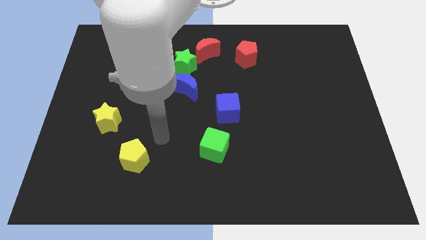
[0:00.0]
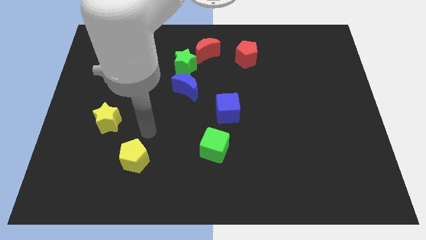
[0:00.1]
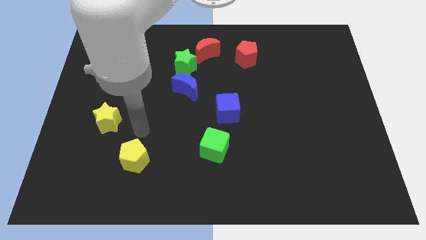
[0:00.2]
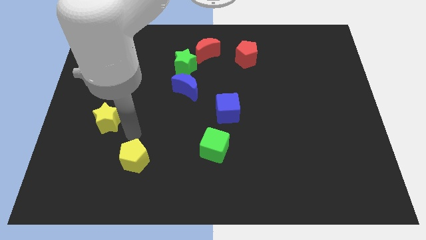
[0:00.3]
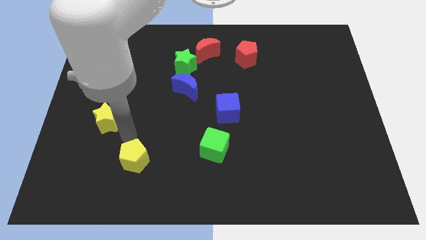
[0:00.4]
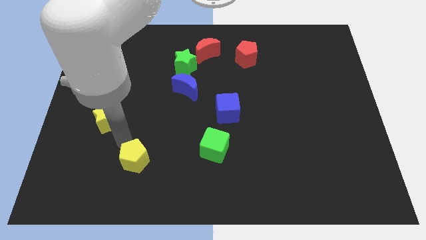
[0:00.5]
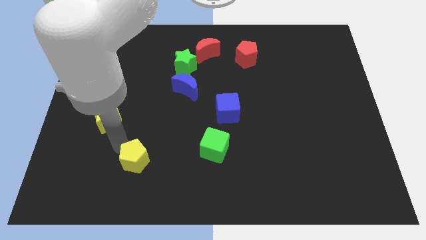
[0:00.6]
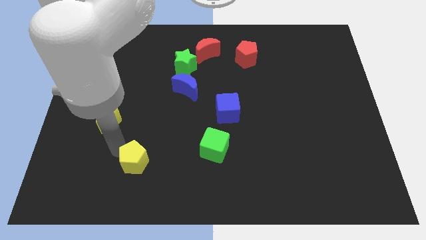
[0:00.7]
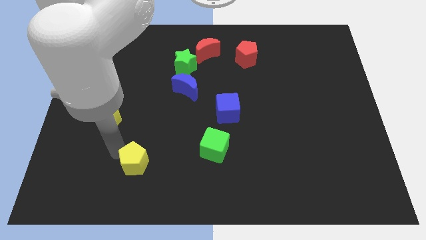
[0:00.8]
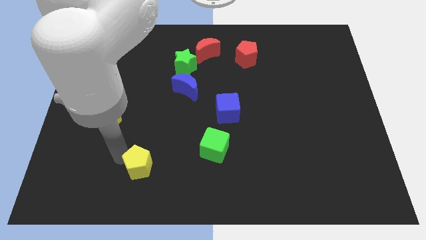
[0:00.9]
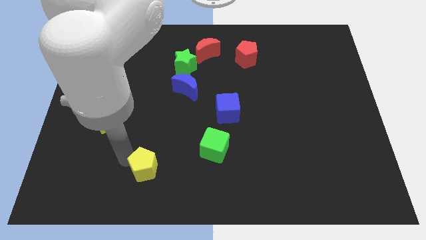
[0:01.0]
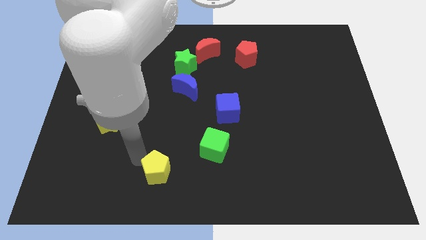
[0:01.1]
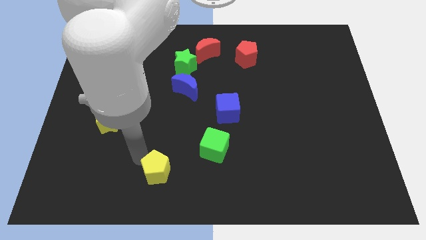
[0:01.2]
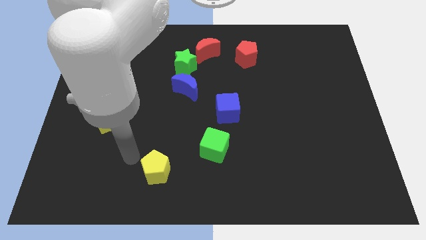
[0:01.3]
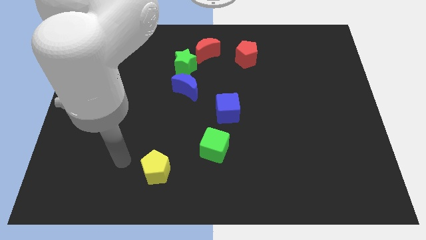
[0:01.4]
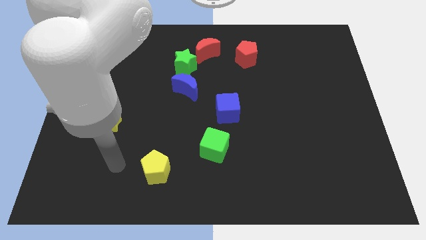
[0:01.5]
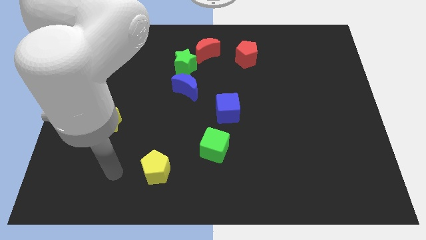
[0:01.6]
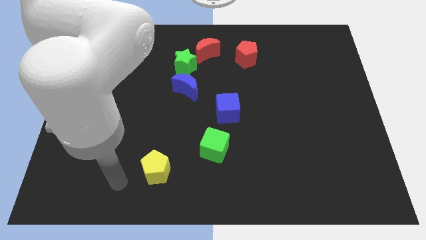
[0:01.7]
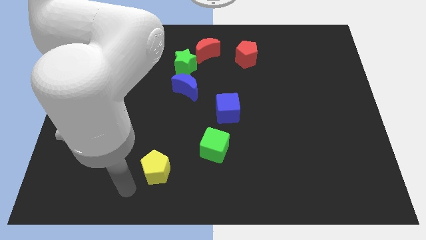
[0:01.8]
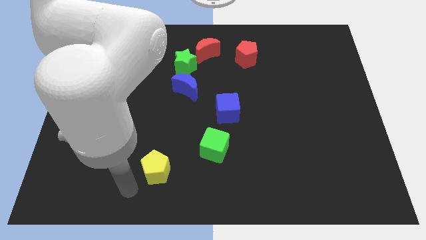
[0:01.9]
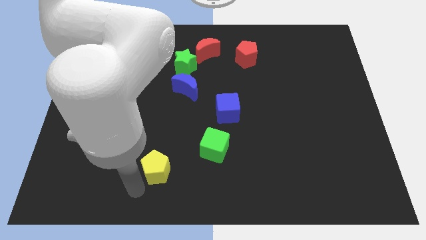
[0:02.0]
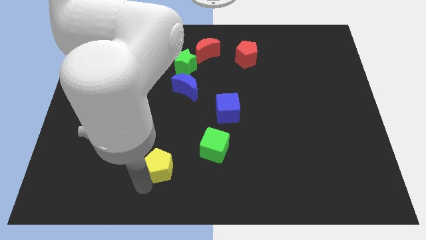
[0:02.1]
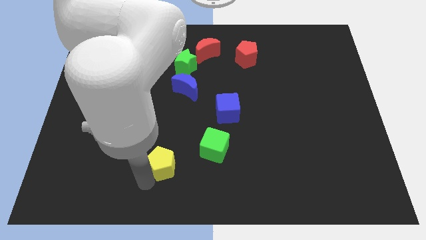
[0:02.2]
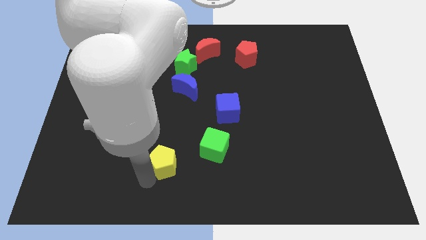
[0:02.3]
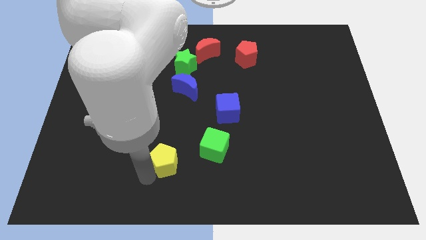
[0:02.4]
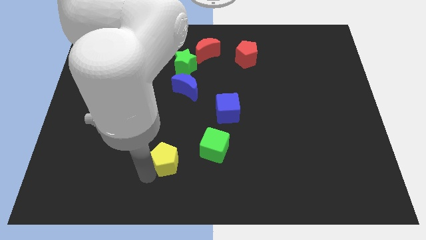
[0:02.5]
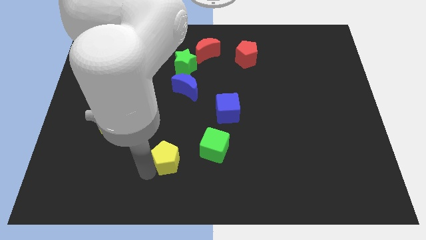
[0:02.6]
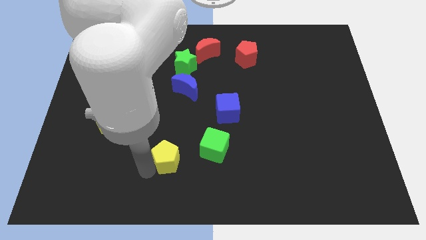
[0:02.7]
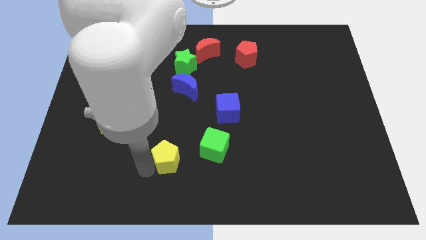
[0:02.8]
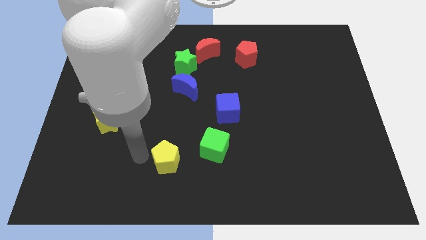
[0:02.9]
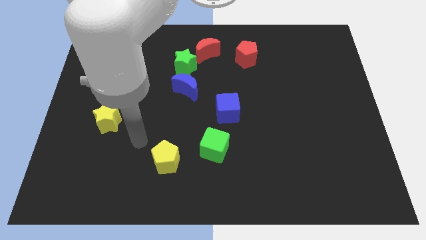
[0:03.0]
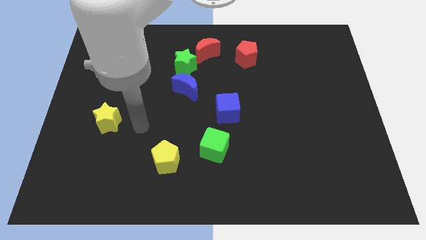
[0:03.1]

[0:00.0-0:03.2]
move the yellow pentagon close to the green cube

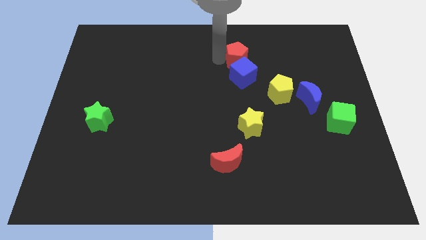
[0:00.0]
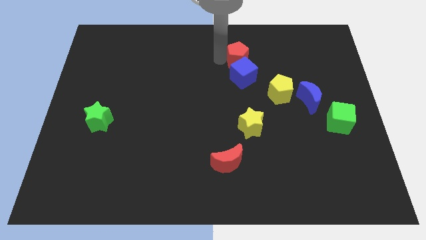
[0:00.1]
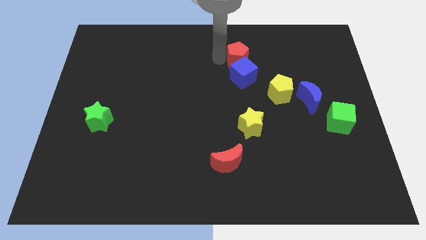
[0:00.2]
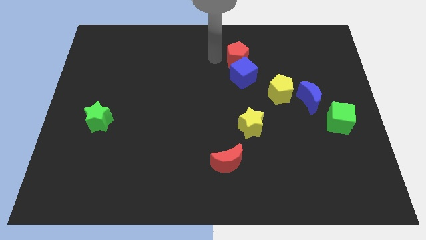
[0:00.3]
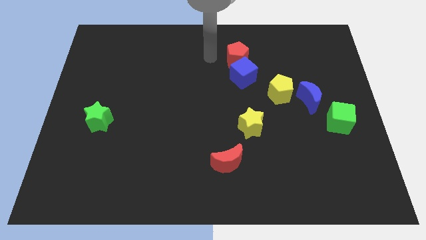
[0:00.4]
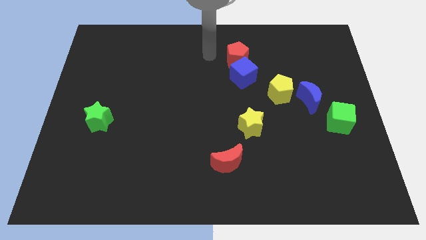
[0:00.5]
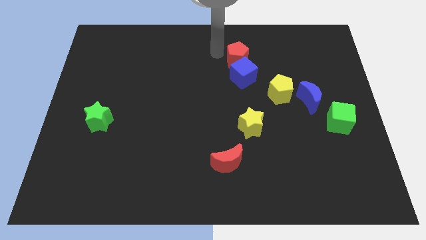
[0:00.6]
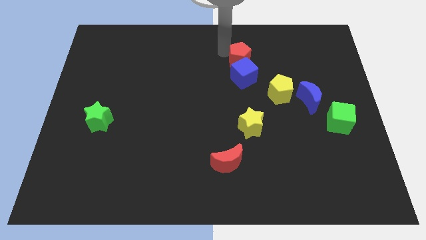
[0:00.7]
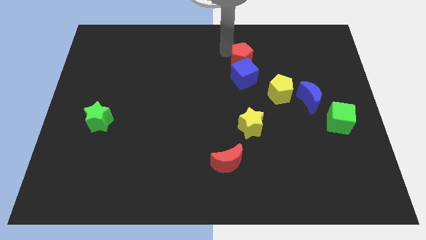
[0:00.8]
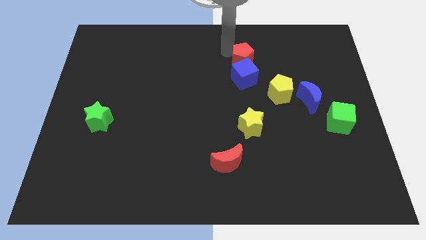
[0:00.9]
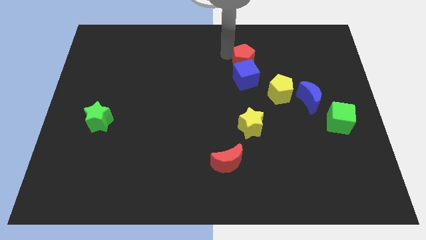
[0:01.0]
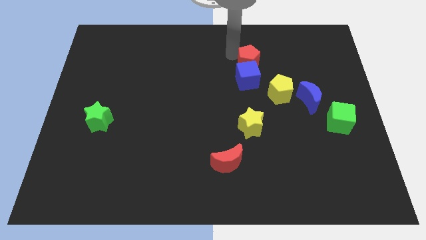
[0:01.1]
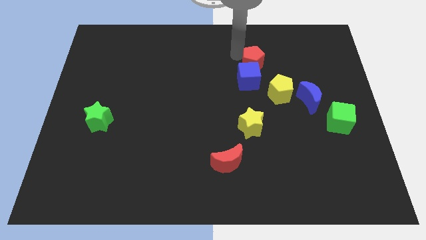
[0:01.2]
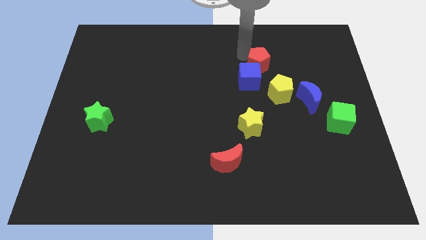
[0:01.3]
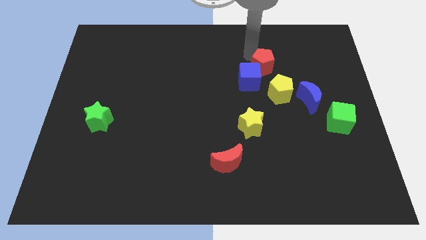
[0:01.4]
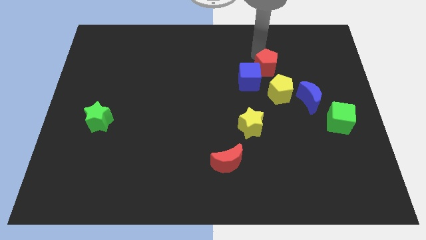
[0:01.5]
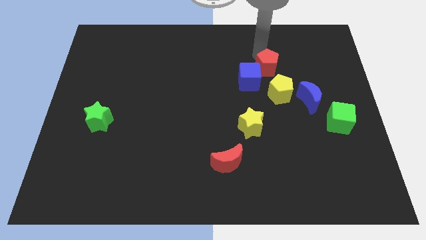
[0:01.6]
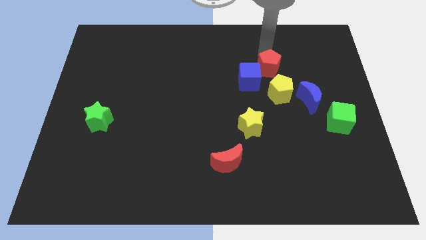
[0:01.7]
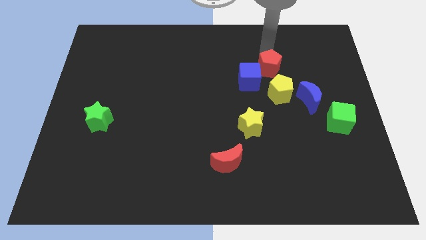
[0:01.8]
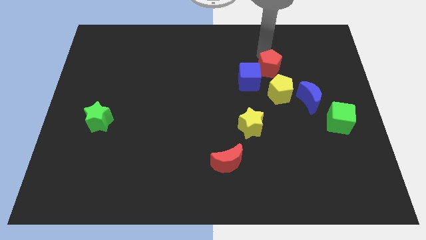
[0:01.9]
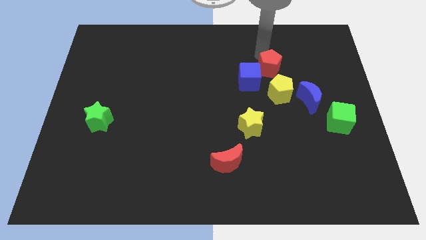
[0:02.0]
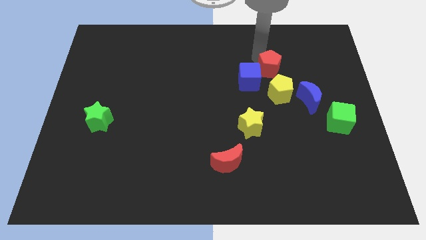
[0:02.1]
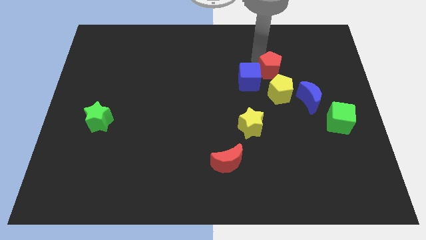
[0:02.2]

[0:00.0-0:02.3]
push the red pentagon close to the yellow pentagon

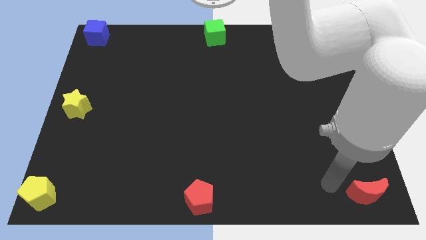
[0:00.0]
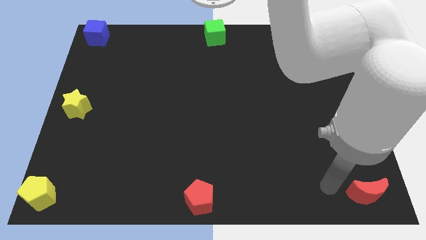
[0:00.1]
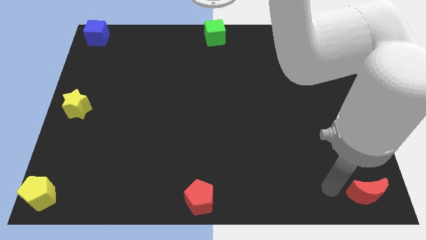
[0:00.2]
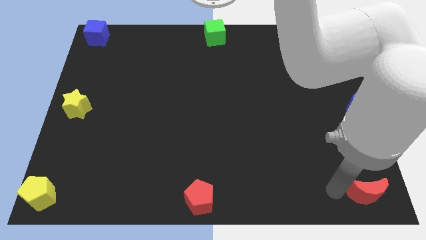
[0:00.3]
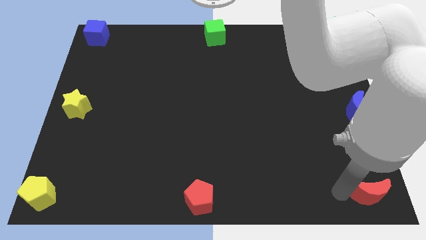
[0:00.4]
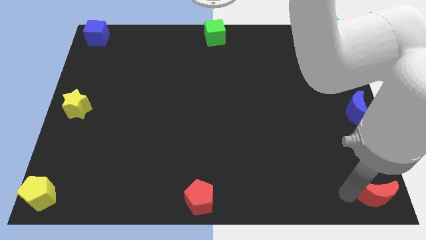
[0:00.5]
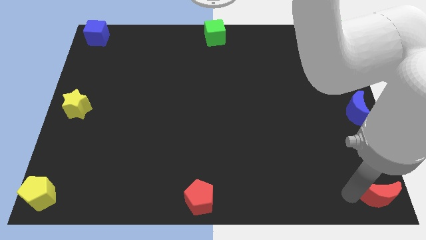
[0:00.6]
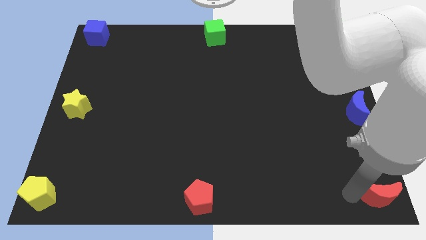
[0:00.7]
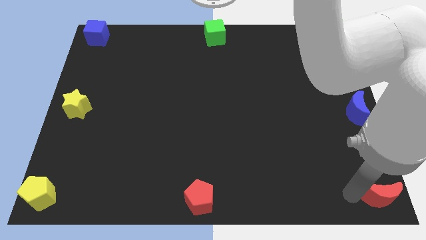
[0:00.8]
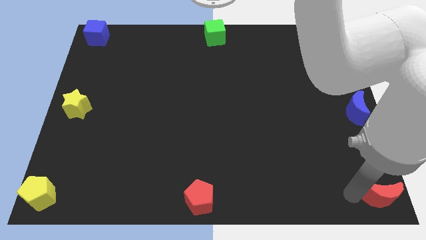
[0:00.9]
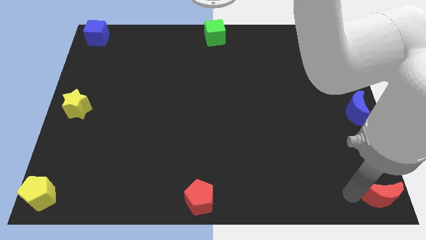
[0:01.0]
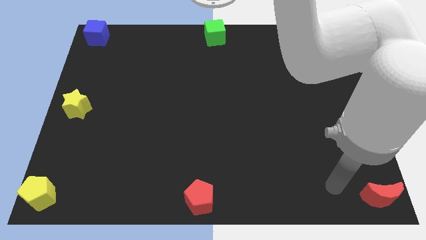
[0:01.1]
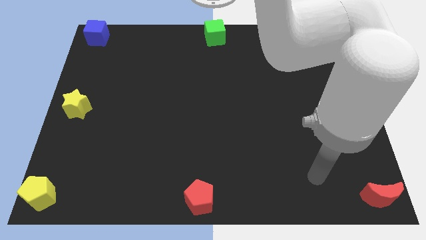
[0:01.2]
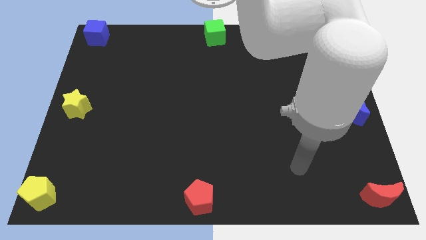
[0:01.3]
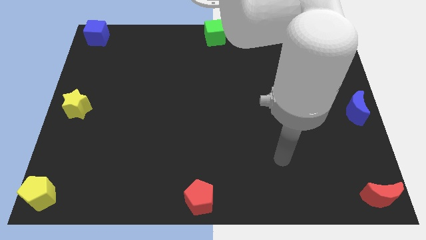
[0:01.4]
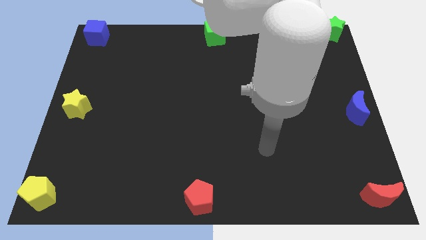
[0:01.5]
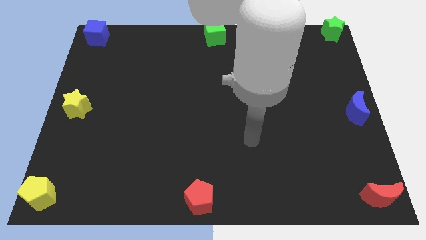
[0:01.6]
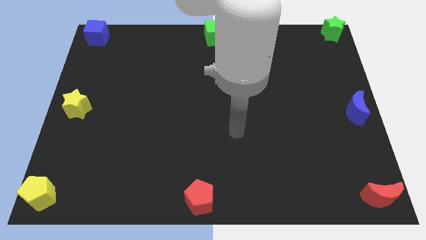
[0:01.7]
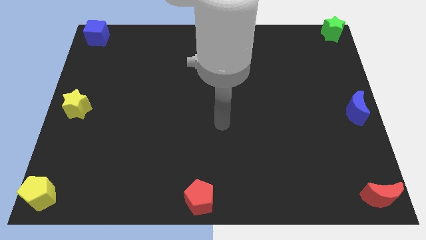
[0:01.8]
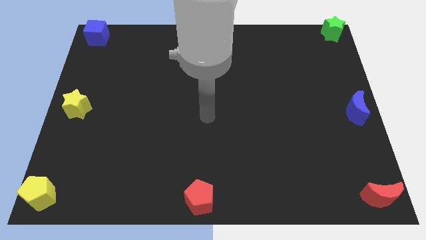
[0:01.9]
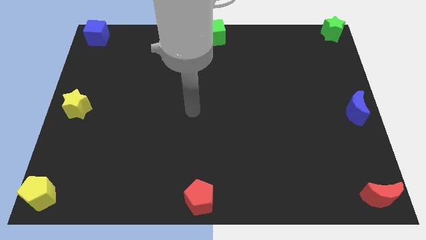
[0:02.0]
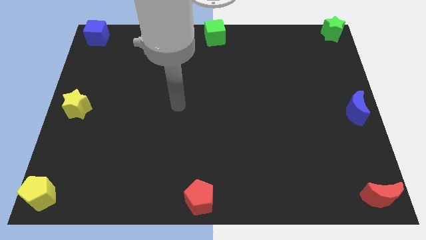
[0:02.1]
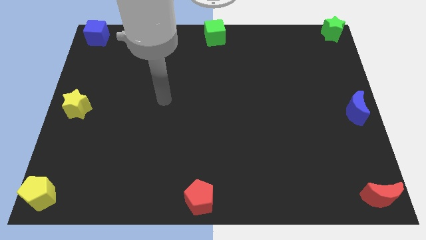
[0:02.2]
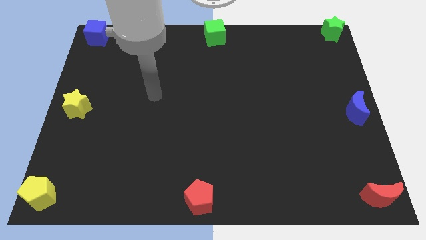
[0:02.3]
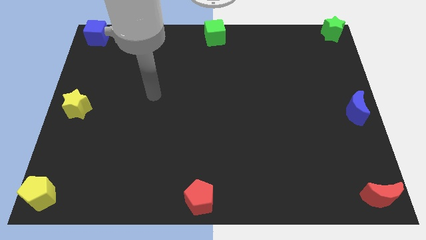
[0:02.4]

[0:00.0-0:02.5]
move the red moon to the bottom right corner

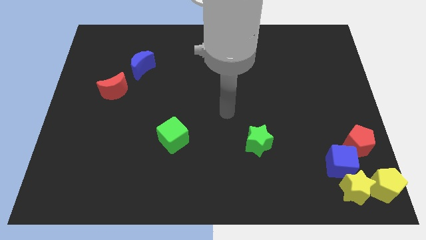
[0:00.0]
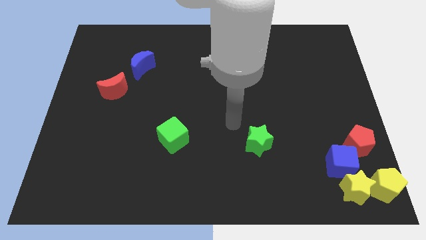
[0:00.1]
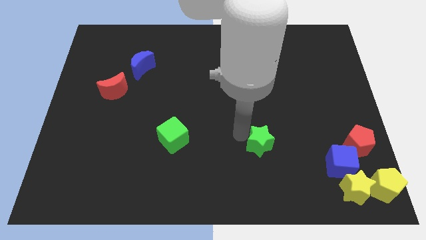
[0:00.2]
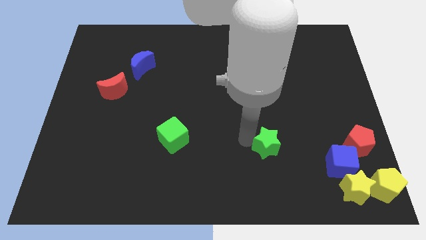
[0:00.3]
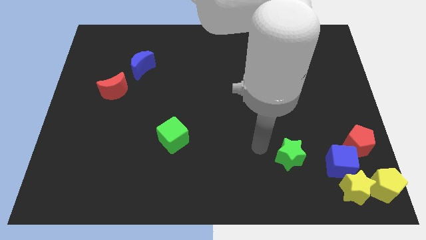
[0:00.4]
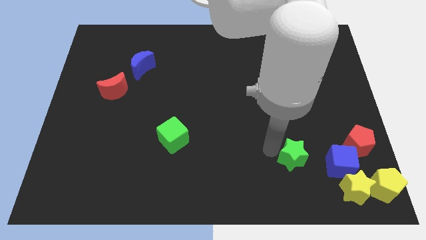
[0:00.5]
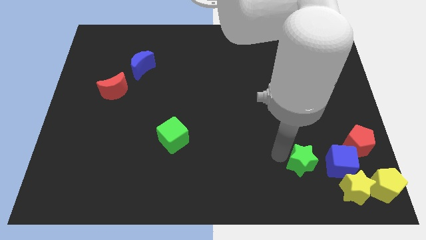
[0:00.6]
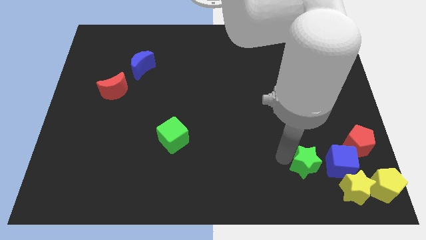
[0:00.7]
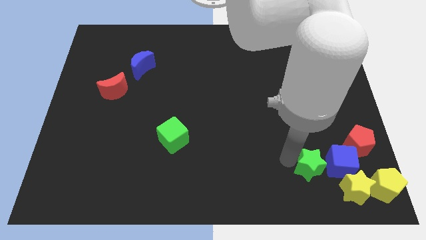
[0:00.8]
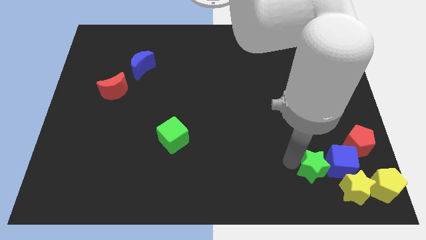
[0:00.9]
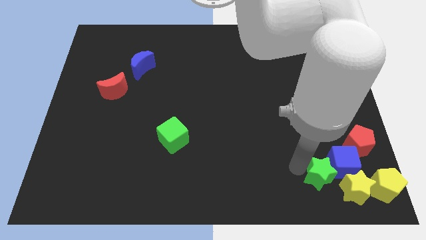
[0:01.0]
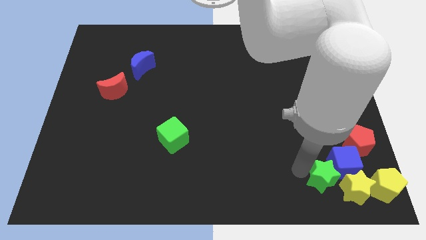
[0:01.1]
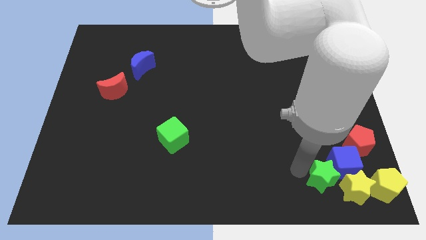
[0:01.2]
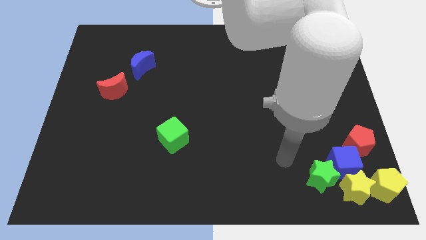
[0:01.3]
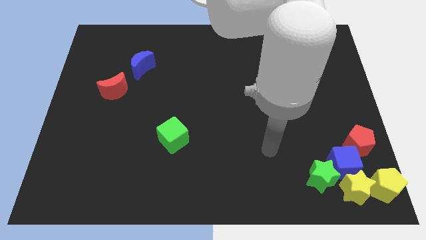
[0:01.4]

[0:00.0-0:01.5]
move the green star to the bottom right of the board
